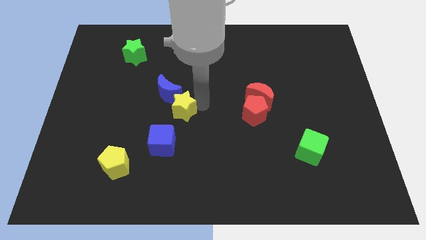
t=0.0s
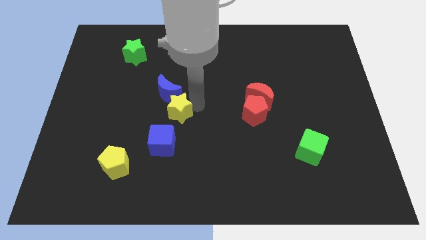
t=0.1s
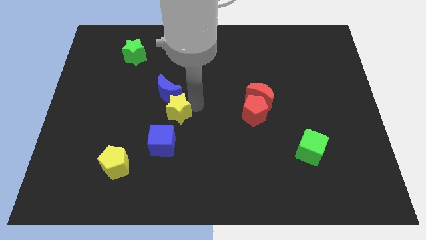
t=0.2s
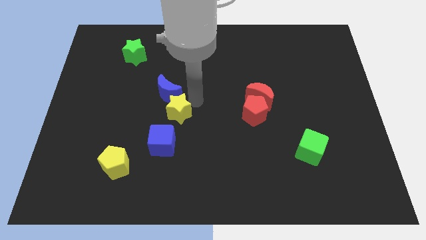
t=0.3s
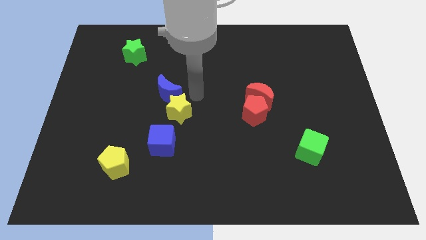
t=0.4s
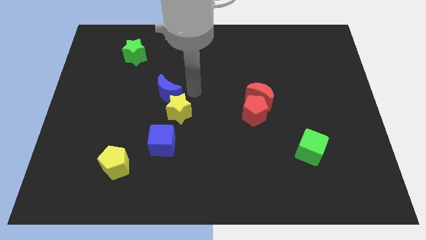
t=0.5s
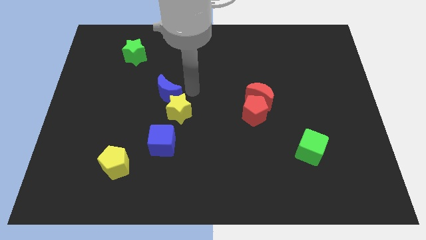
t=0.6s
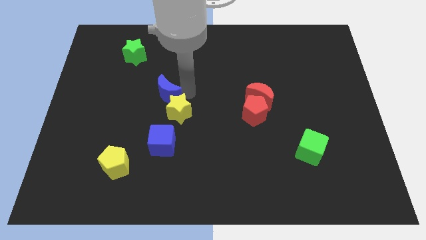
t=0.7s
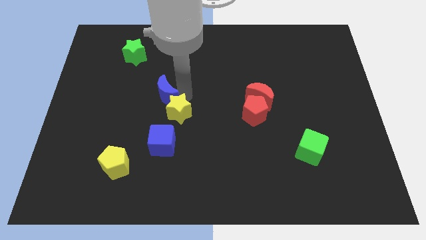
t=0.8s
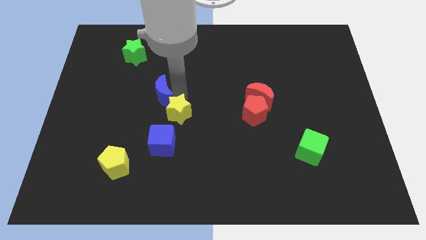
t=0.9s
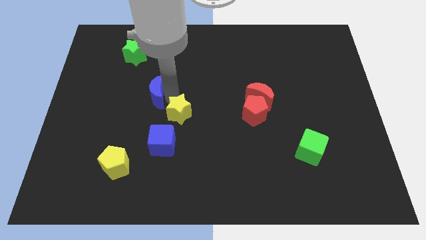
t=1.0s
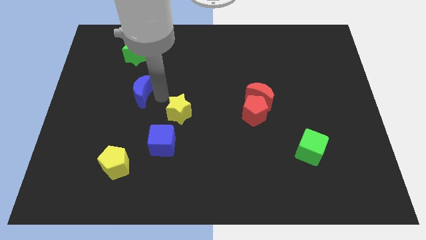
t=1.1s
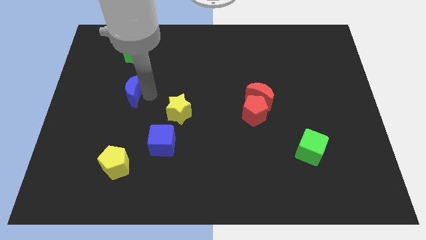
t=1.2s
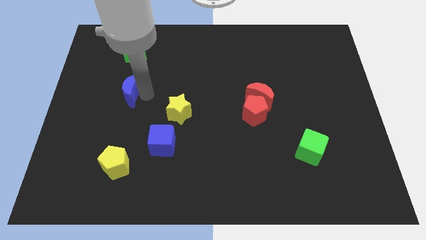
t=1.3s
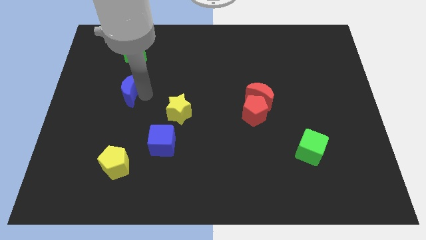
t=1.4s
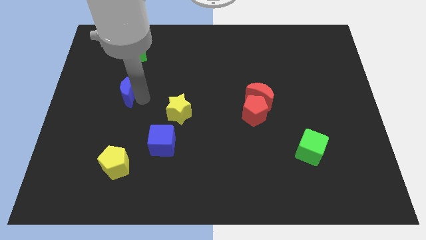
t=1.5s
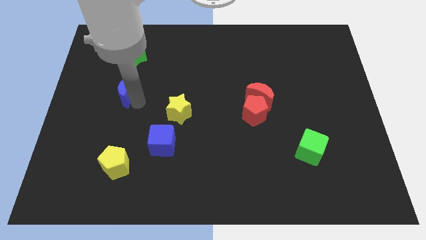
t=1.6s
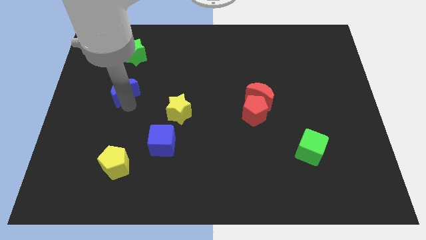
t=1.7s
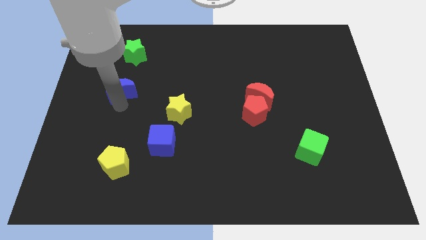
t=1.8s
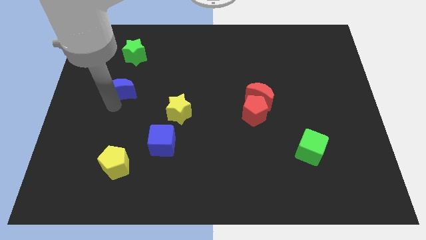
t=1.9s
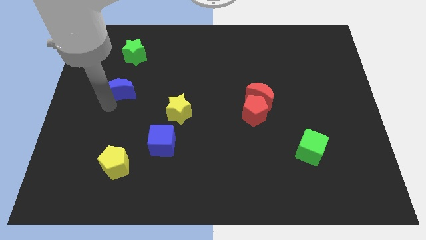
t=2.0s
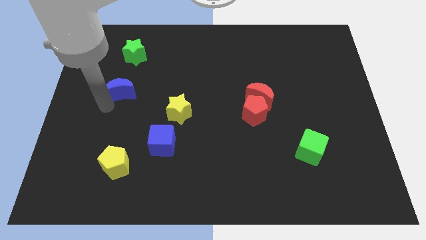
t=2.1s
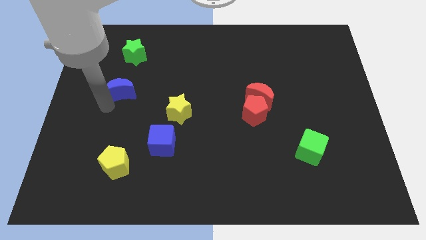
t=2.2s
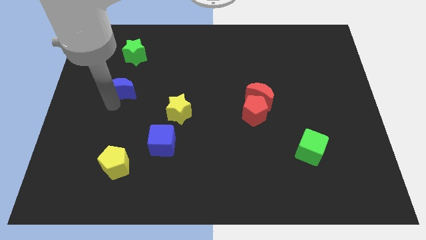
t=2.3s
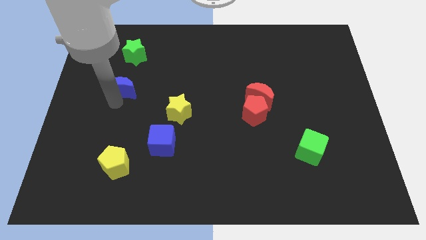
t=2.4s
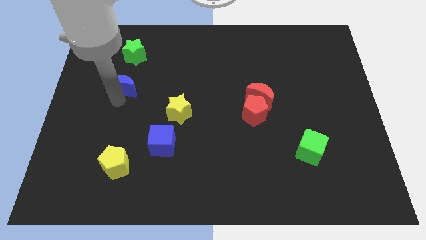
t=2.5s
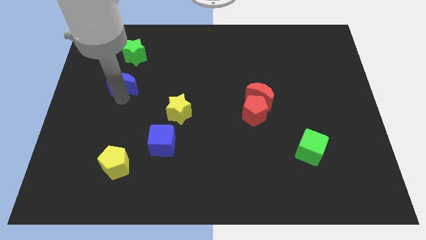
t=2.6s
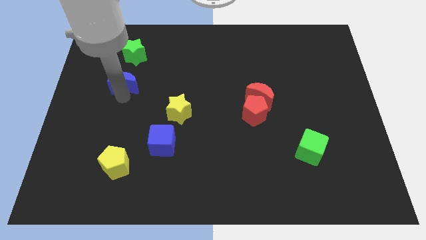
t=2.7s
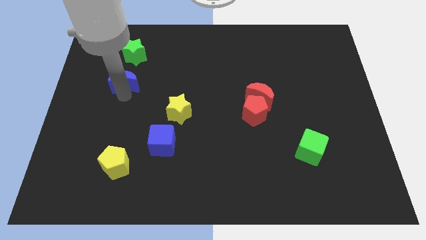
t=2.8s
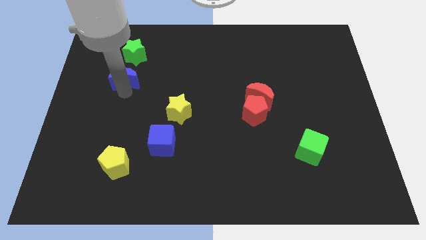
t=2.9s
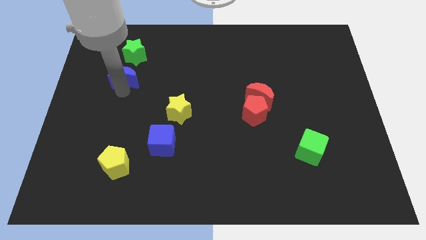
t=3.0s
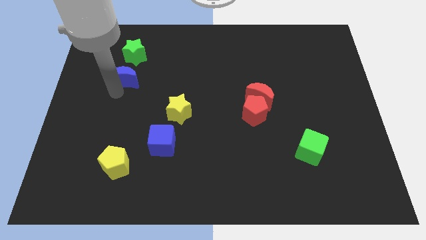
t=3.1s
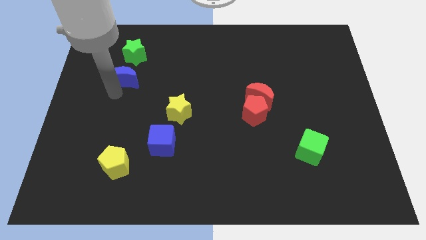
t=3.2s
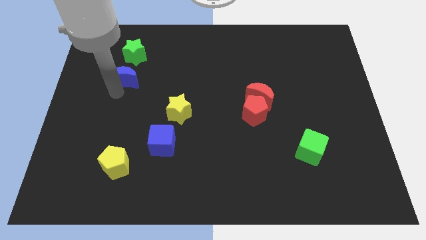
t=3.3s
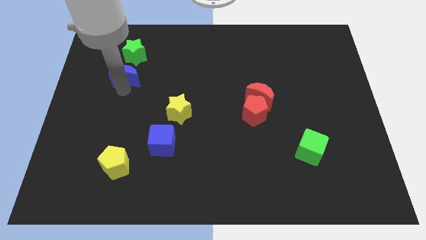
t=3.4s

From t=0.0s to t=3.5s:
place the blue moon below the green star

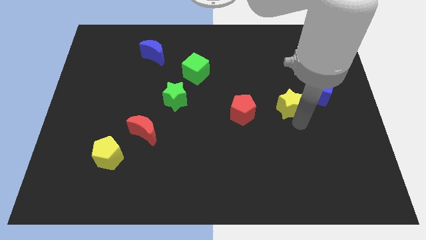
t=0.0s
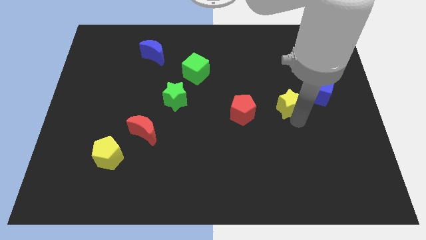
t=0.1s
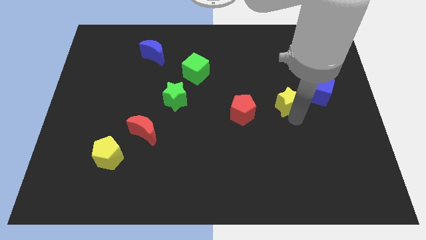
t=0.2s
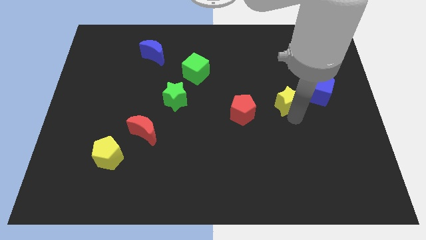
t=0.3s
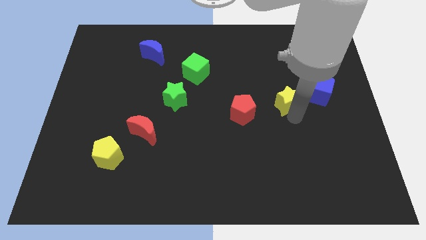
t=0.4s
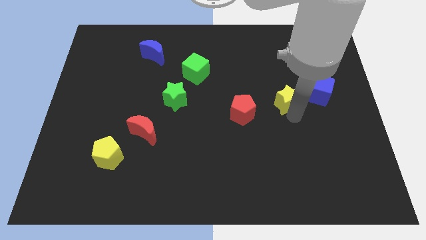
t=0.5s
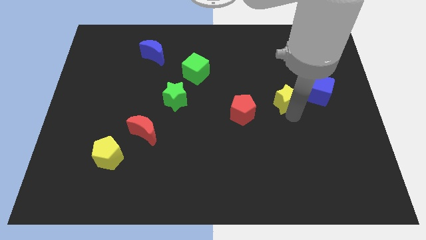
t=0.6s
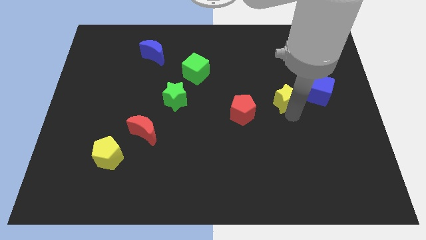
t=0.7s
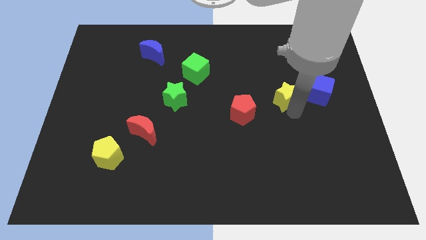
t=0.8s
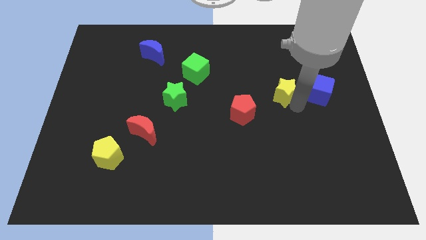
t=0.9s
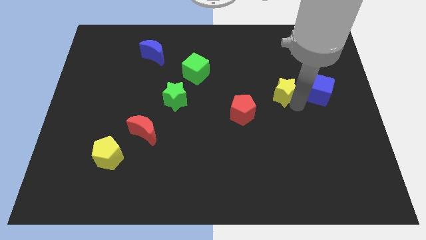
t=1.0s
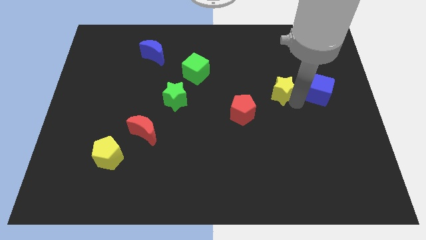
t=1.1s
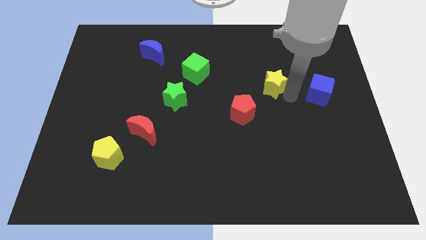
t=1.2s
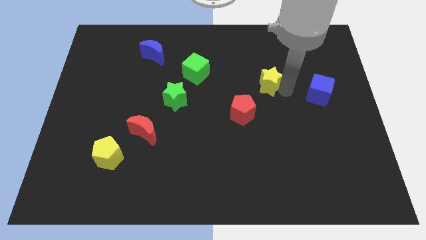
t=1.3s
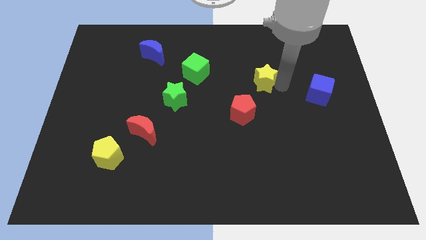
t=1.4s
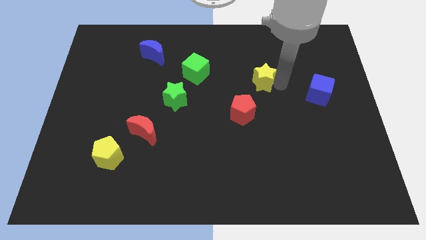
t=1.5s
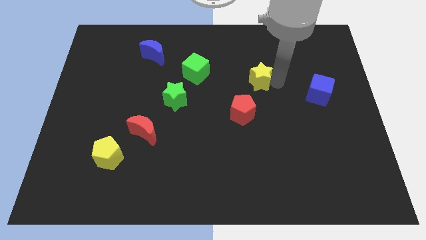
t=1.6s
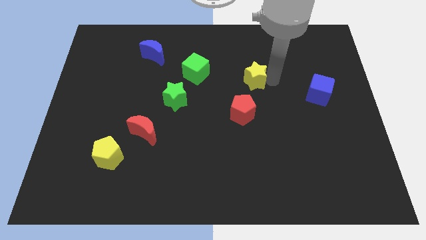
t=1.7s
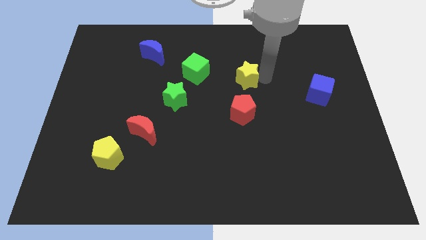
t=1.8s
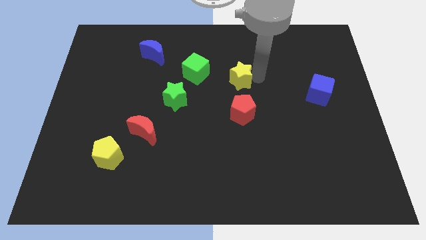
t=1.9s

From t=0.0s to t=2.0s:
move the yellow star above the red pentagon

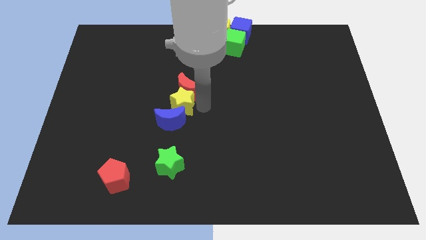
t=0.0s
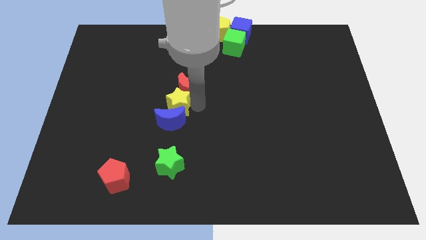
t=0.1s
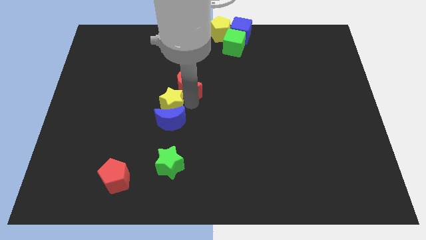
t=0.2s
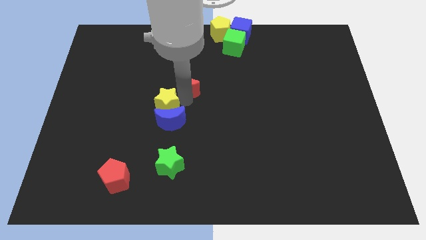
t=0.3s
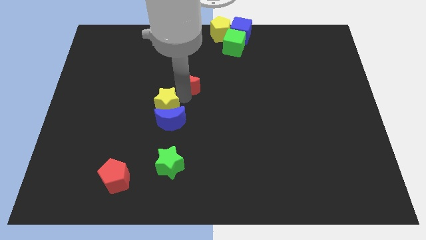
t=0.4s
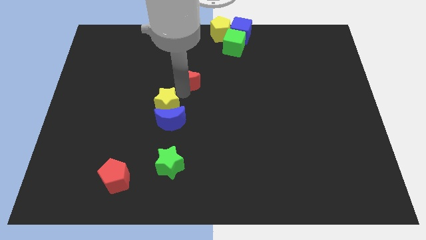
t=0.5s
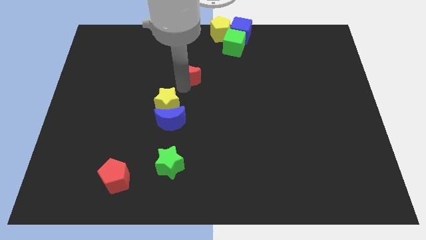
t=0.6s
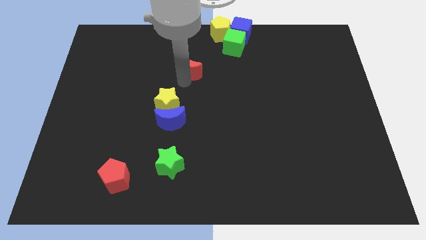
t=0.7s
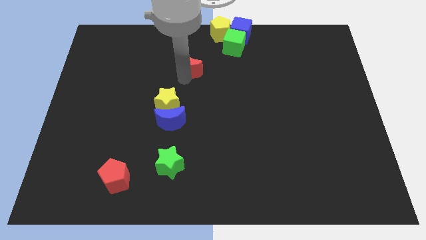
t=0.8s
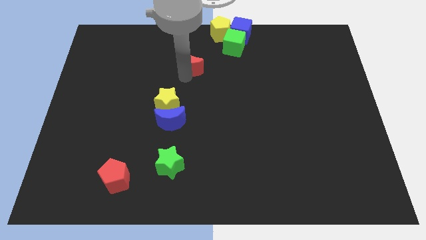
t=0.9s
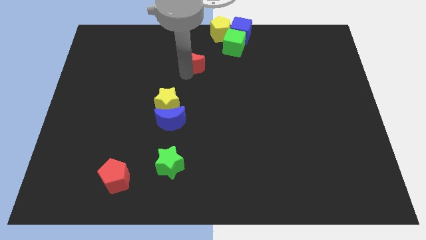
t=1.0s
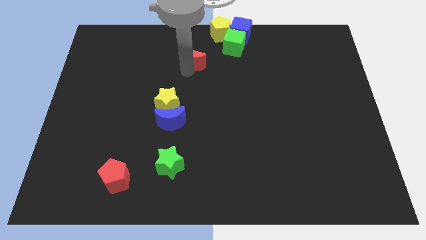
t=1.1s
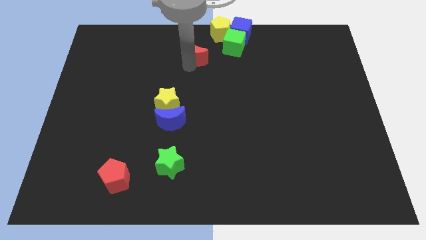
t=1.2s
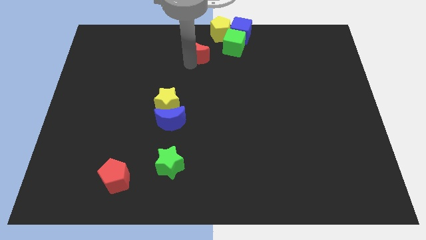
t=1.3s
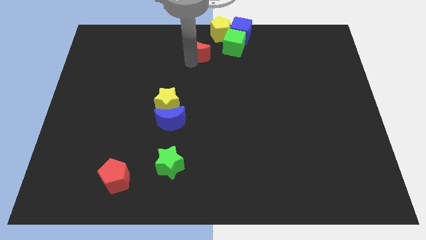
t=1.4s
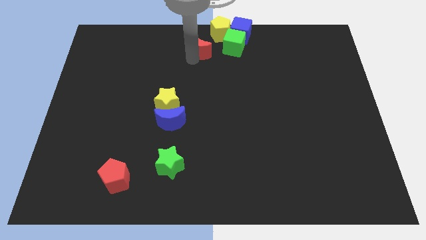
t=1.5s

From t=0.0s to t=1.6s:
separate the red moon from the yellow star

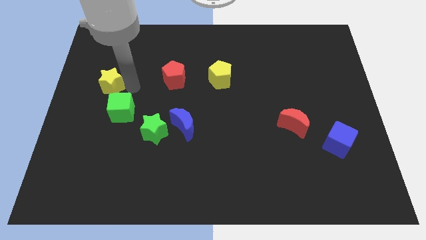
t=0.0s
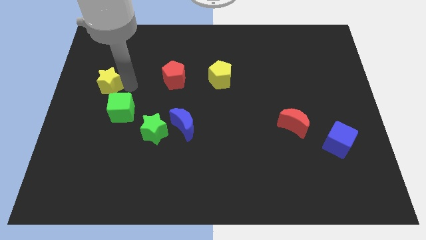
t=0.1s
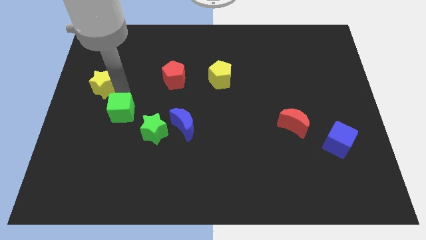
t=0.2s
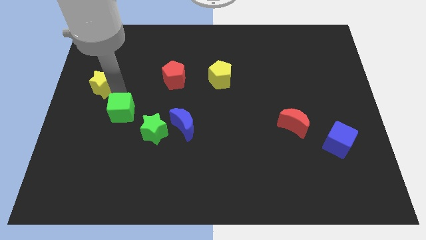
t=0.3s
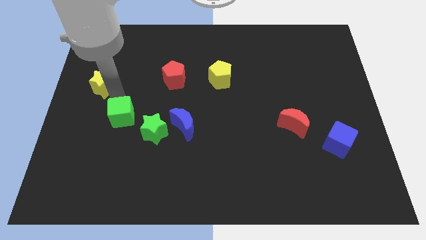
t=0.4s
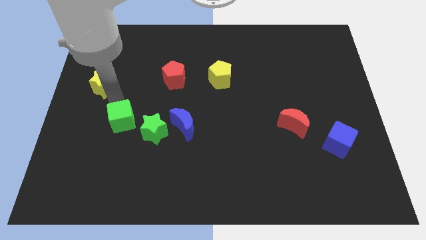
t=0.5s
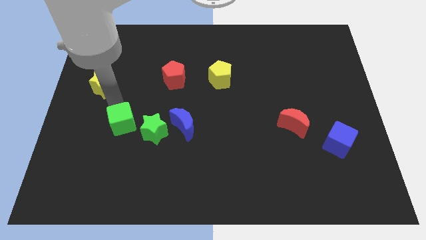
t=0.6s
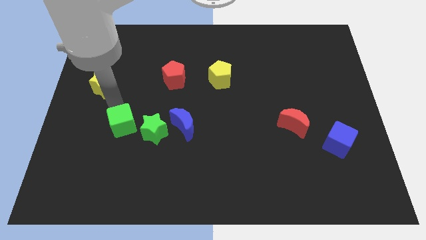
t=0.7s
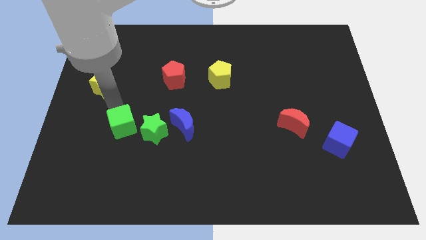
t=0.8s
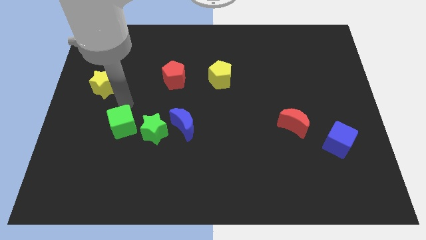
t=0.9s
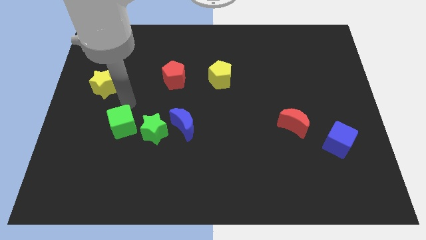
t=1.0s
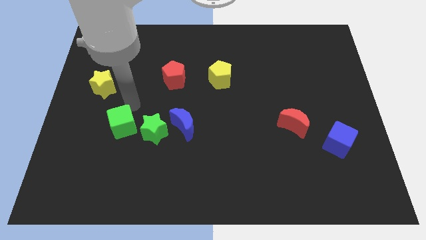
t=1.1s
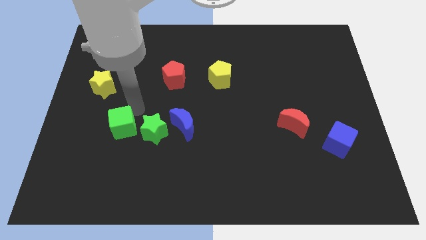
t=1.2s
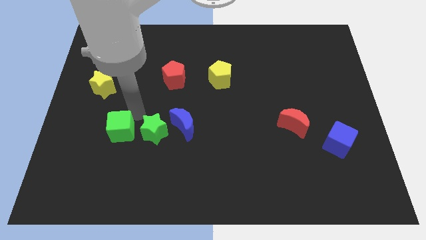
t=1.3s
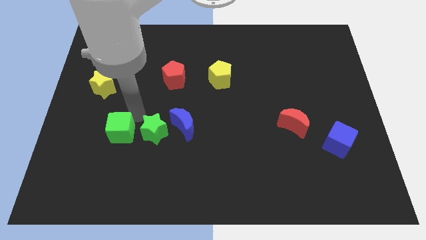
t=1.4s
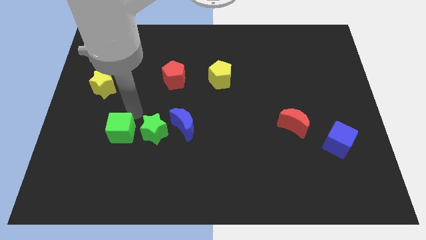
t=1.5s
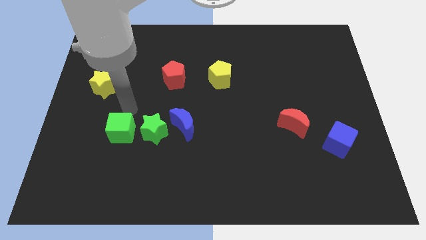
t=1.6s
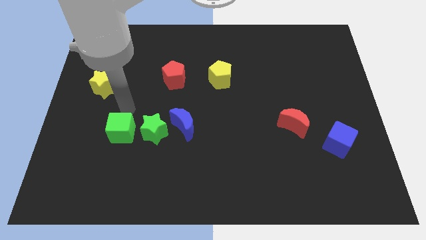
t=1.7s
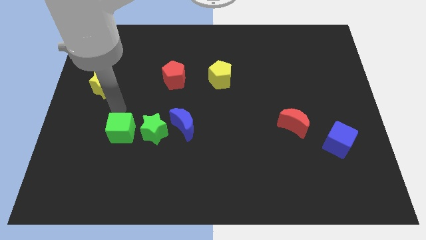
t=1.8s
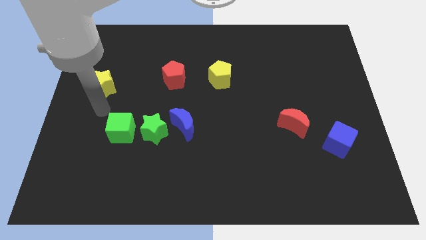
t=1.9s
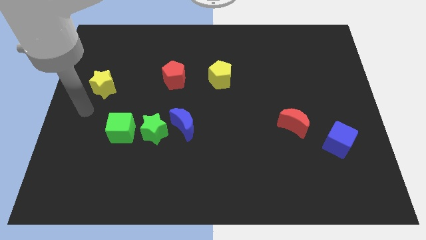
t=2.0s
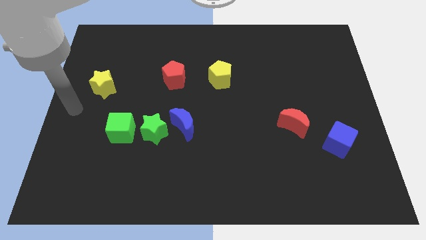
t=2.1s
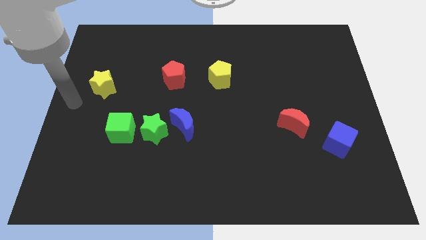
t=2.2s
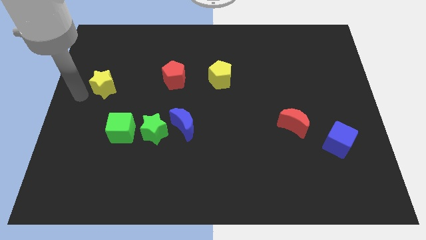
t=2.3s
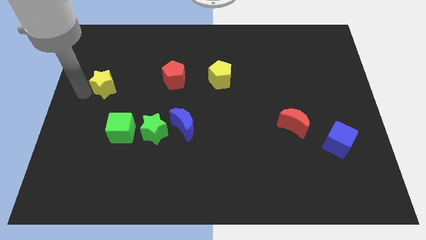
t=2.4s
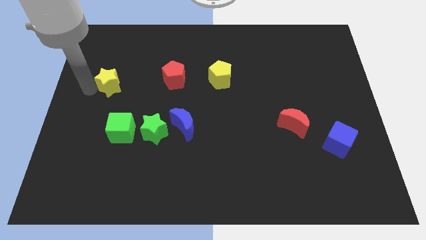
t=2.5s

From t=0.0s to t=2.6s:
push the green cube towards the left side of the green star
